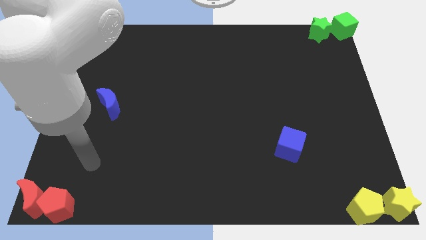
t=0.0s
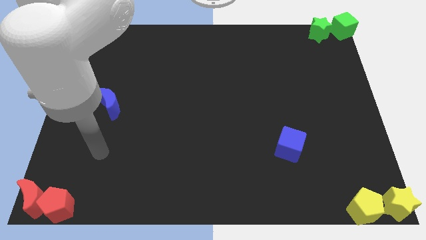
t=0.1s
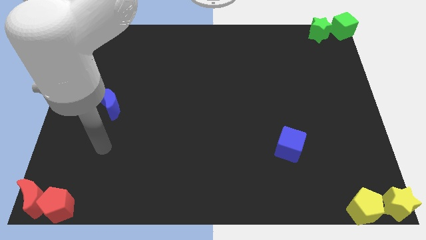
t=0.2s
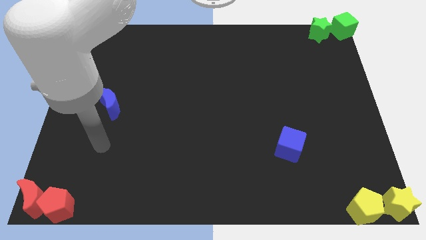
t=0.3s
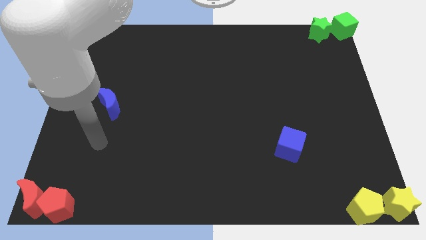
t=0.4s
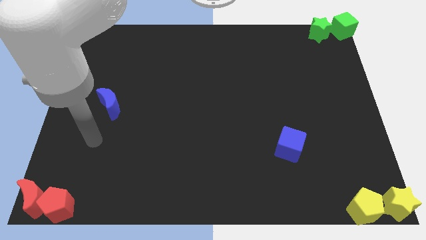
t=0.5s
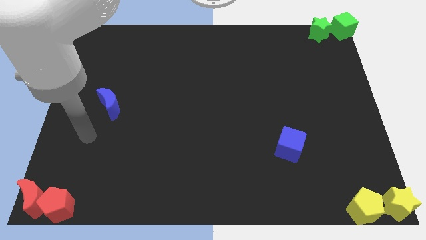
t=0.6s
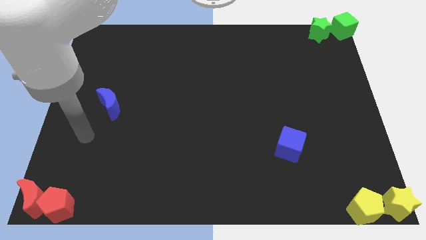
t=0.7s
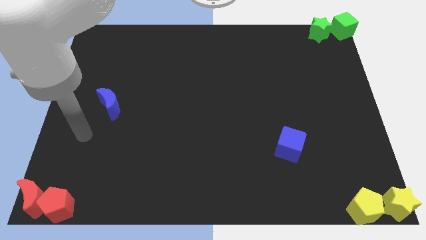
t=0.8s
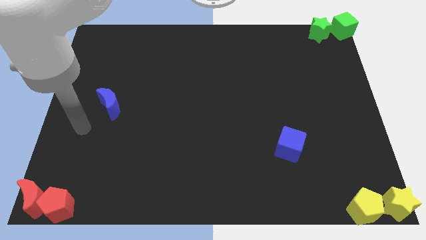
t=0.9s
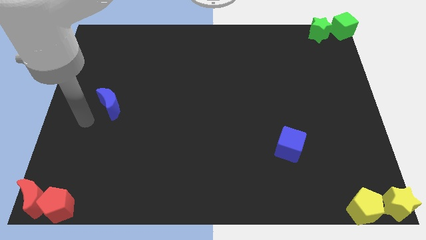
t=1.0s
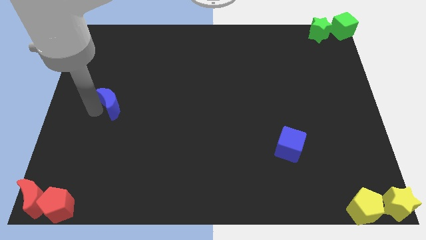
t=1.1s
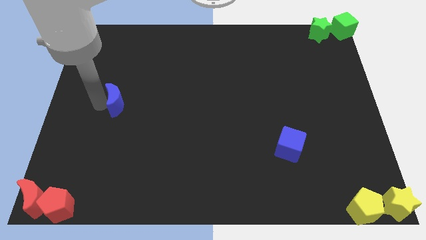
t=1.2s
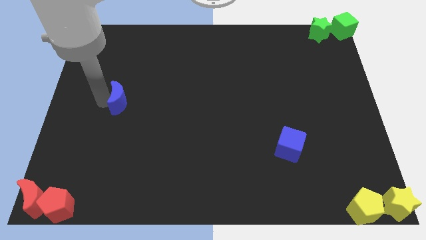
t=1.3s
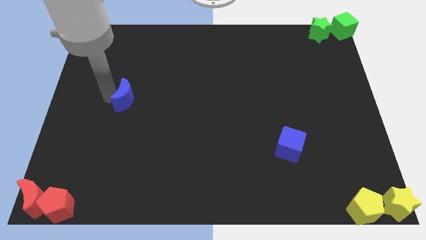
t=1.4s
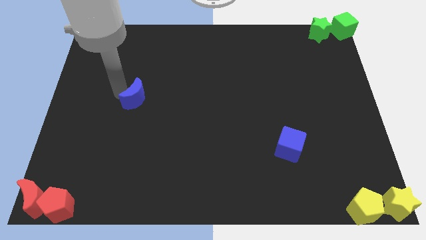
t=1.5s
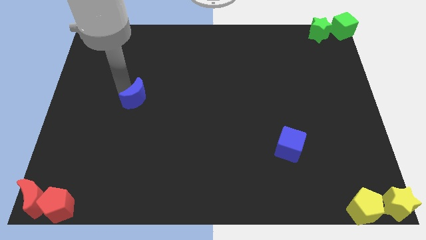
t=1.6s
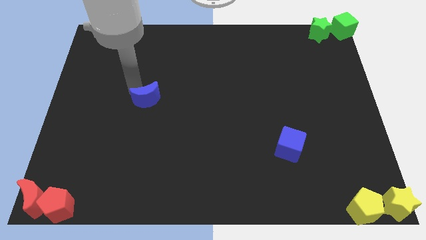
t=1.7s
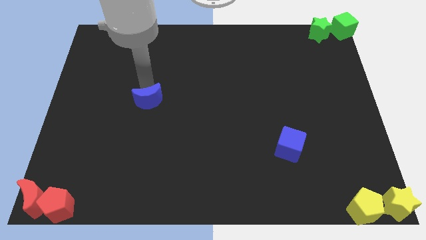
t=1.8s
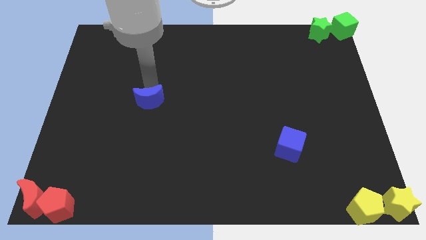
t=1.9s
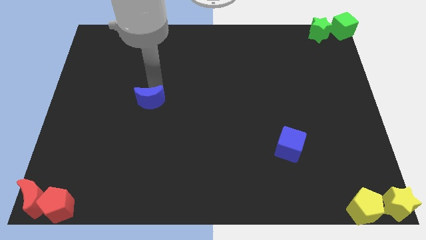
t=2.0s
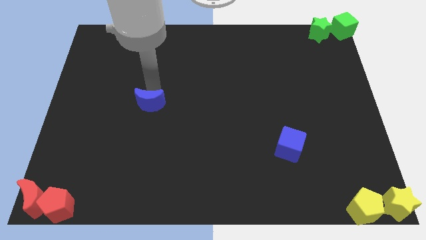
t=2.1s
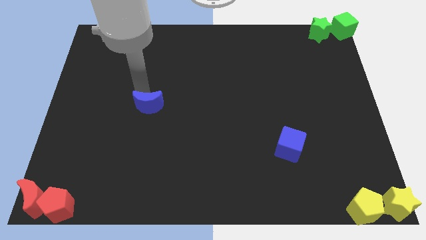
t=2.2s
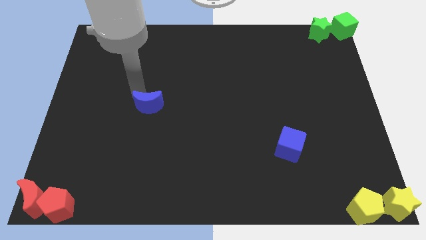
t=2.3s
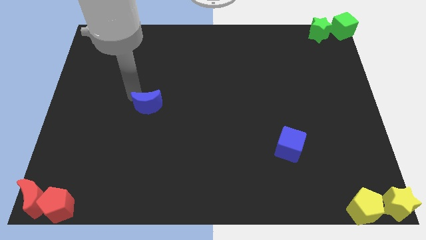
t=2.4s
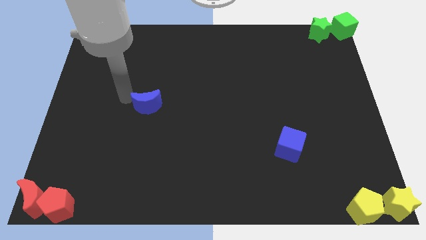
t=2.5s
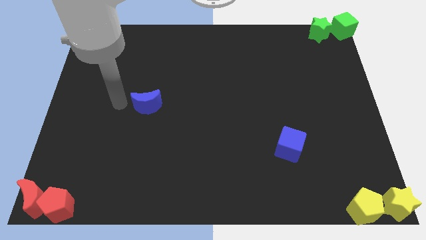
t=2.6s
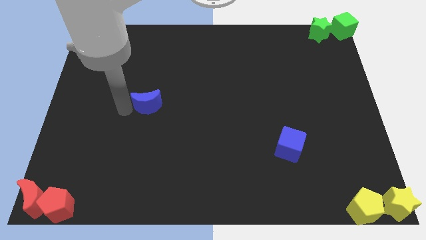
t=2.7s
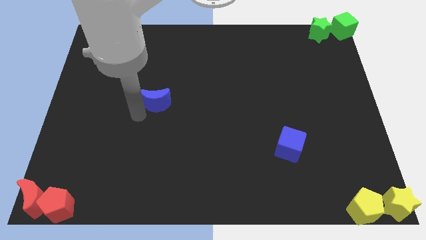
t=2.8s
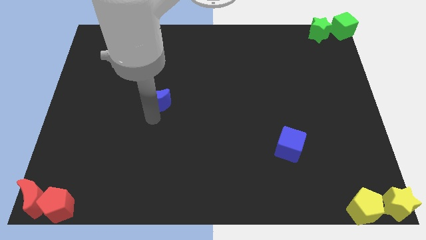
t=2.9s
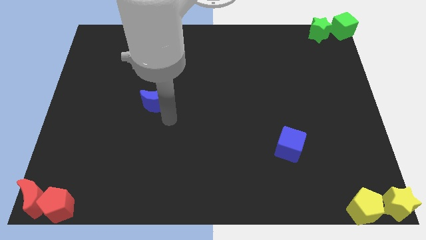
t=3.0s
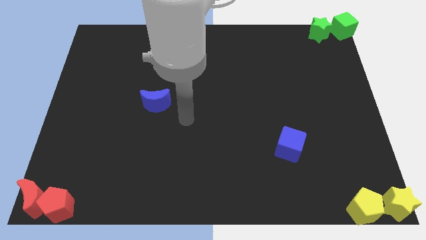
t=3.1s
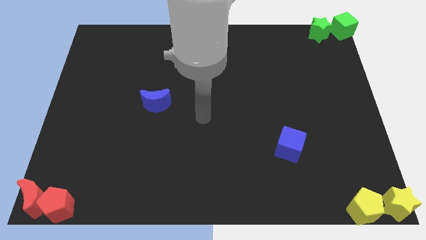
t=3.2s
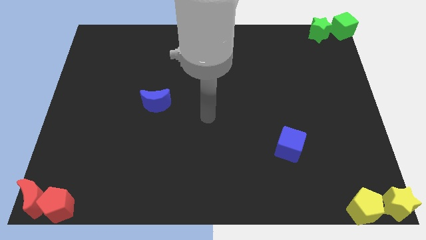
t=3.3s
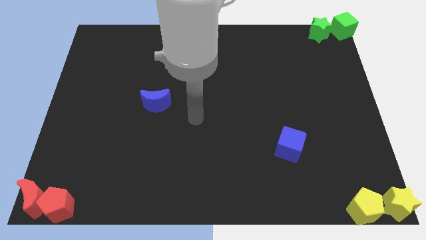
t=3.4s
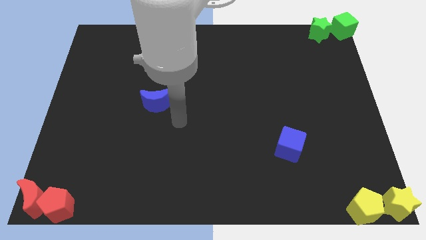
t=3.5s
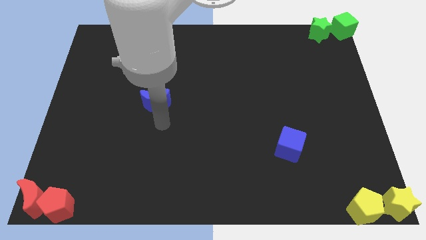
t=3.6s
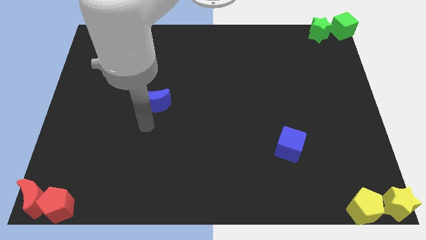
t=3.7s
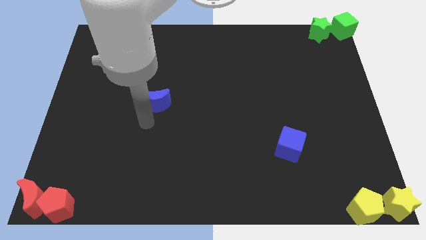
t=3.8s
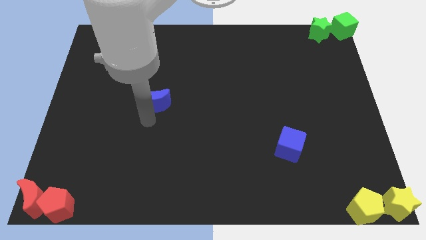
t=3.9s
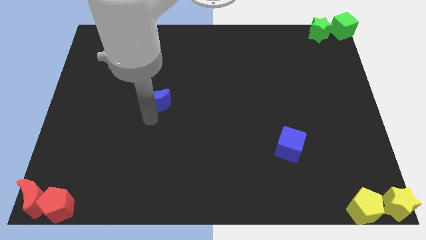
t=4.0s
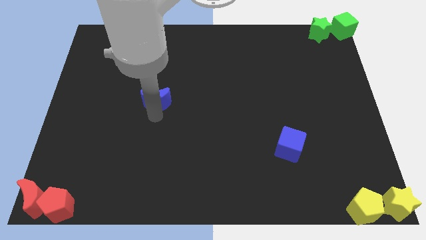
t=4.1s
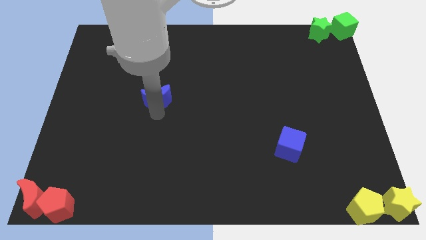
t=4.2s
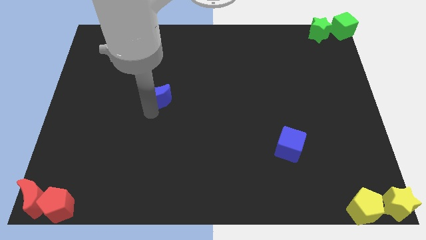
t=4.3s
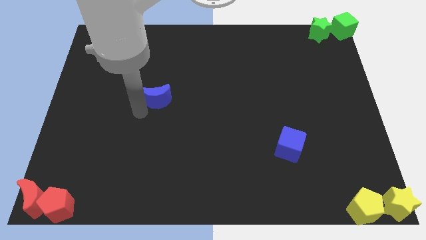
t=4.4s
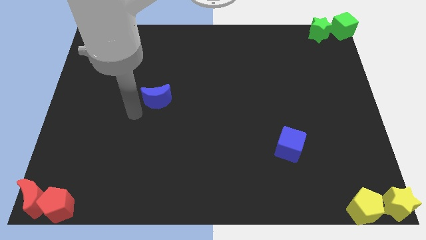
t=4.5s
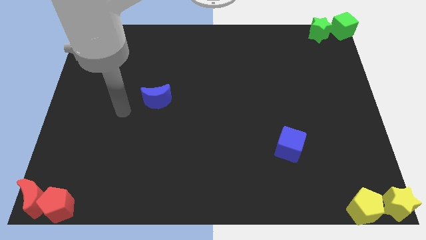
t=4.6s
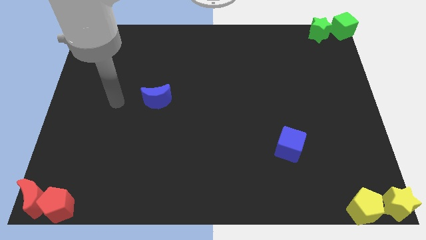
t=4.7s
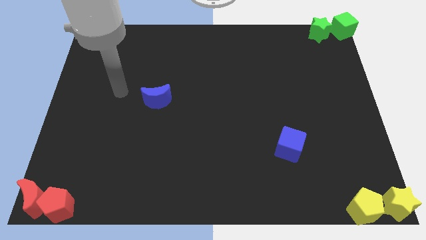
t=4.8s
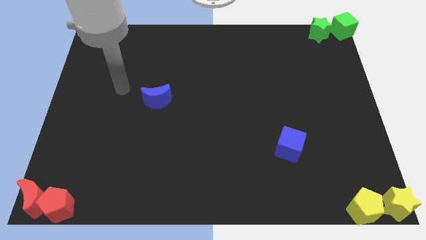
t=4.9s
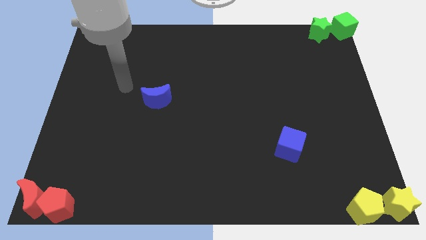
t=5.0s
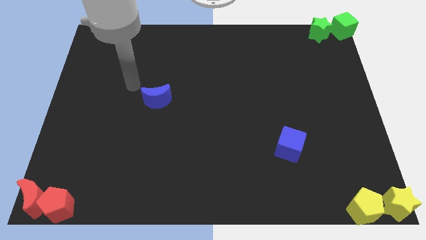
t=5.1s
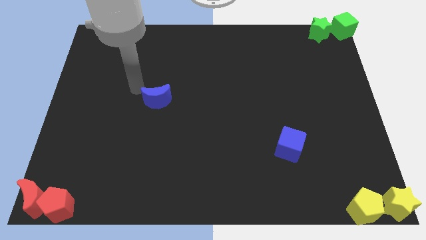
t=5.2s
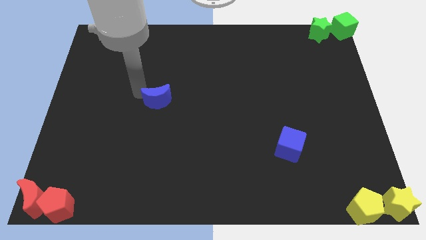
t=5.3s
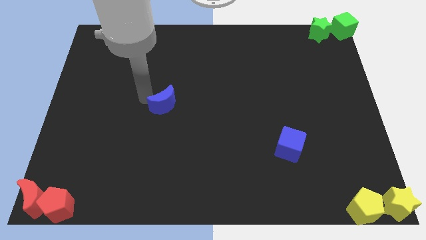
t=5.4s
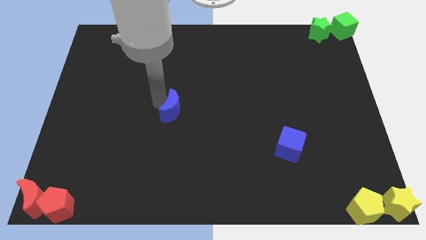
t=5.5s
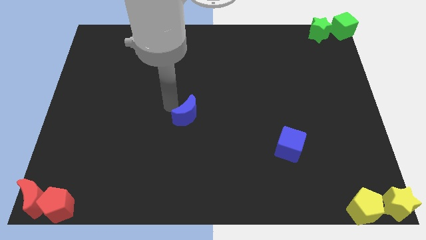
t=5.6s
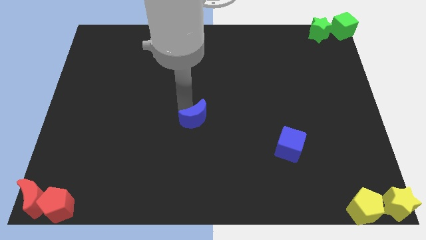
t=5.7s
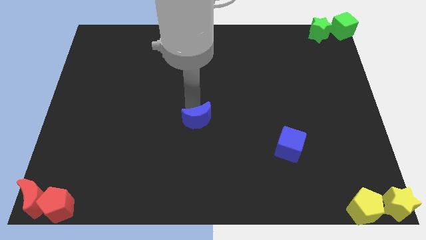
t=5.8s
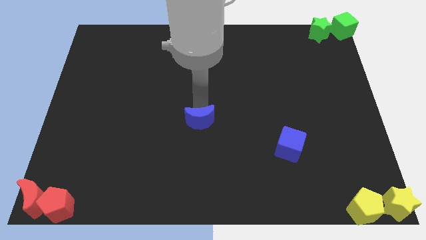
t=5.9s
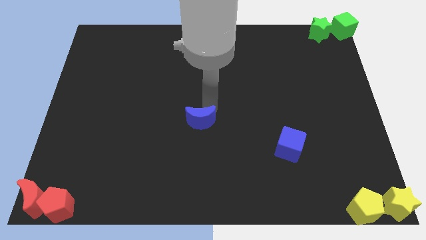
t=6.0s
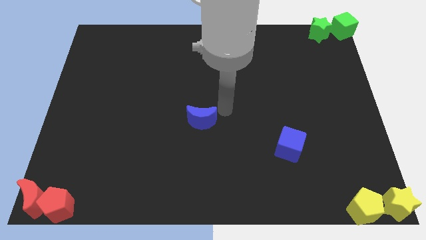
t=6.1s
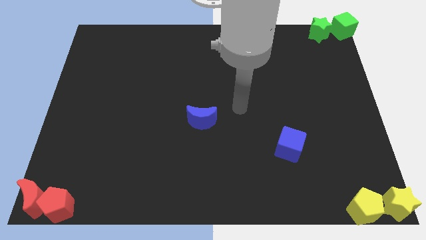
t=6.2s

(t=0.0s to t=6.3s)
move the blue crescent to the center of the board

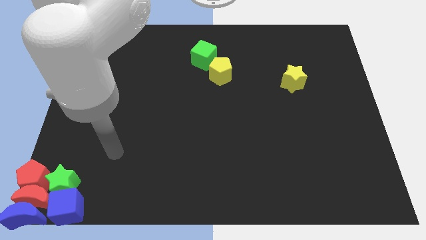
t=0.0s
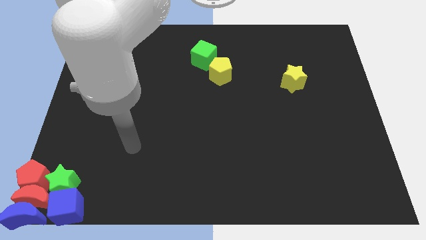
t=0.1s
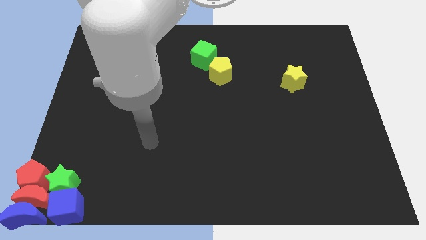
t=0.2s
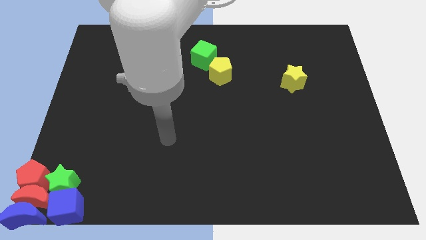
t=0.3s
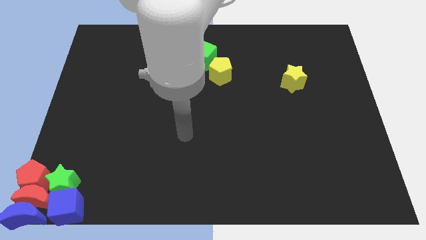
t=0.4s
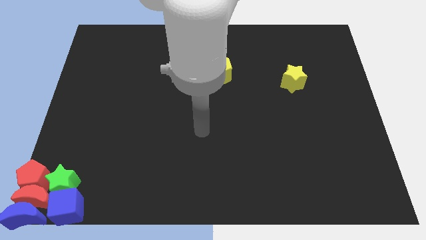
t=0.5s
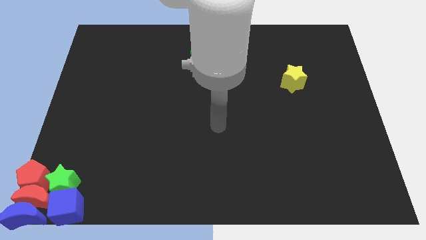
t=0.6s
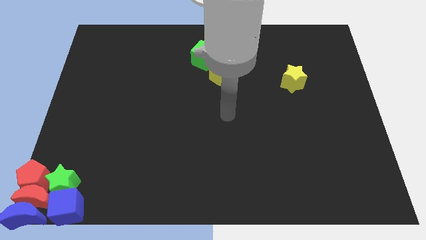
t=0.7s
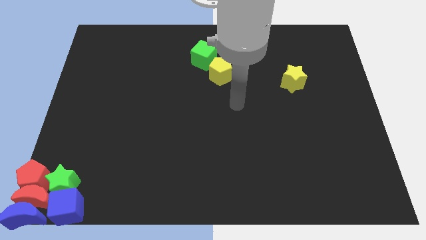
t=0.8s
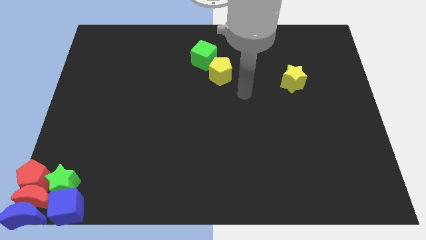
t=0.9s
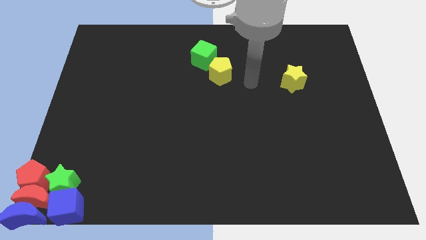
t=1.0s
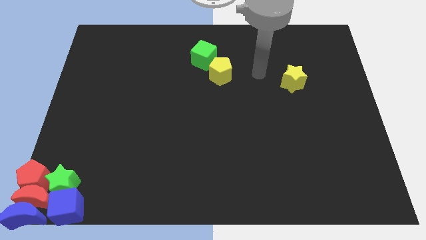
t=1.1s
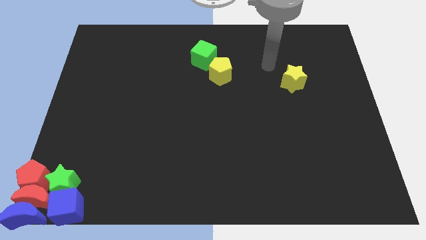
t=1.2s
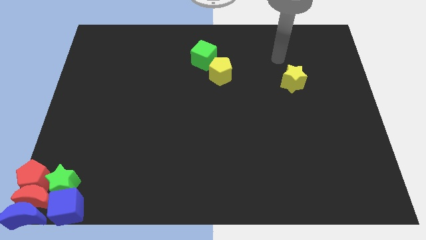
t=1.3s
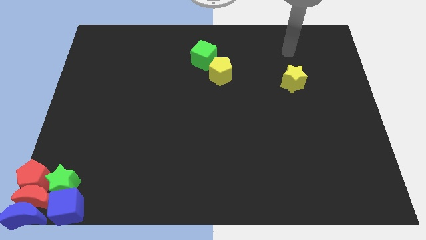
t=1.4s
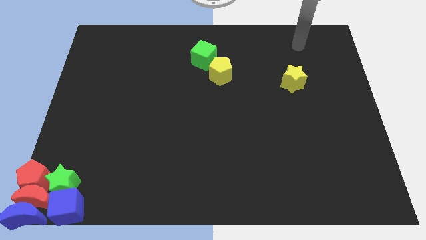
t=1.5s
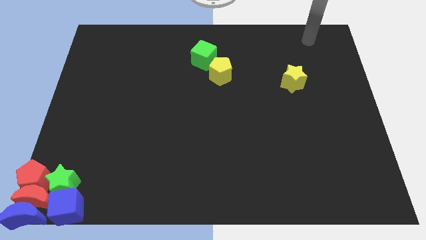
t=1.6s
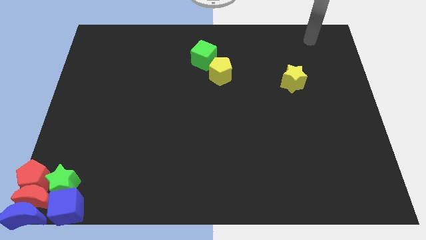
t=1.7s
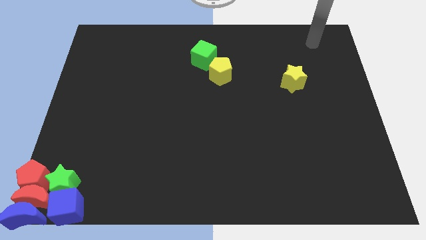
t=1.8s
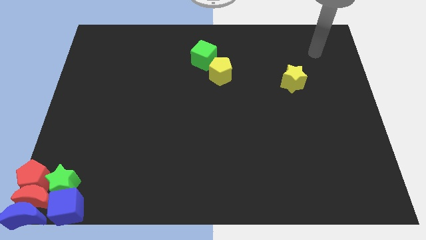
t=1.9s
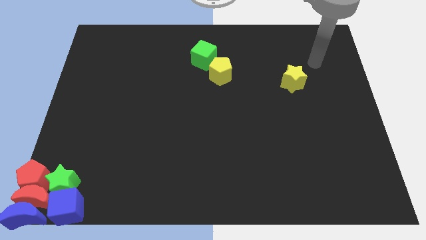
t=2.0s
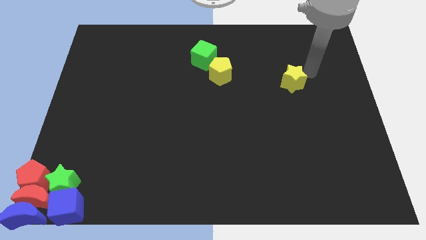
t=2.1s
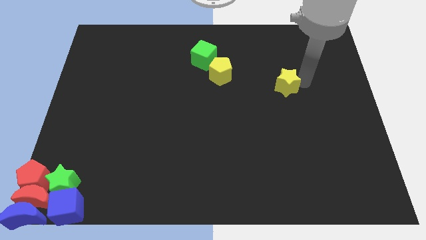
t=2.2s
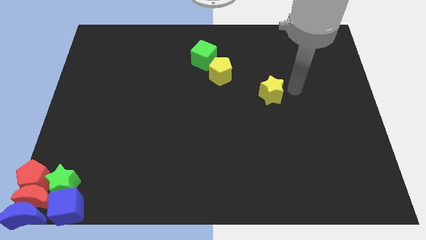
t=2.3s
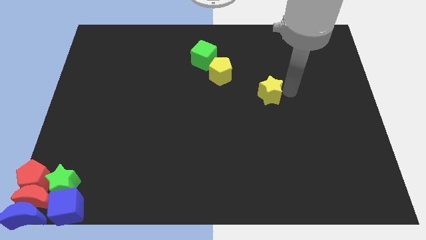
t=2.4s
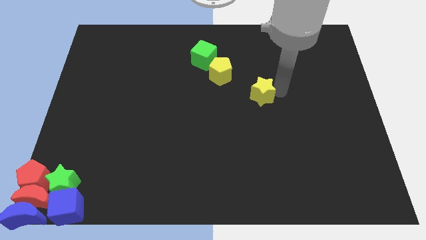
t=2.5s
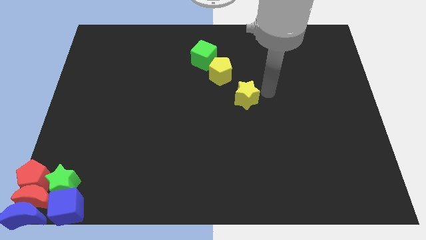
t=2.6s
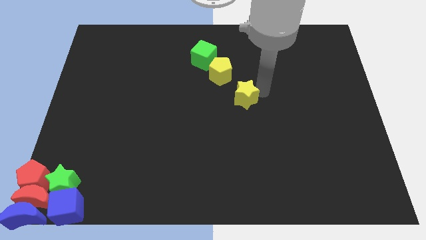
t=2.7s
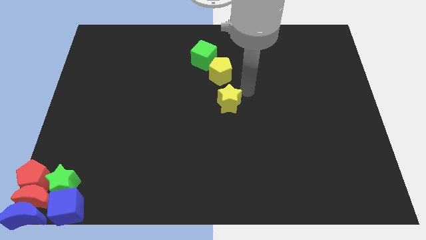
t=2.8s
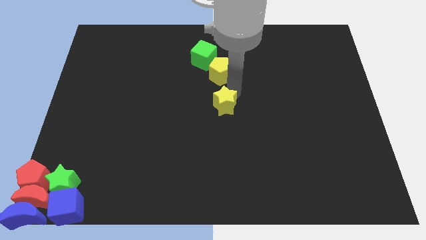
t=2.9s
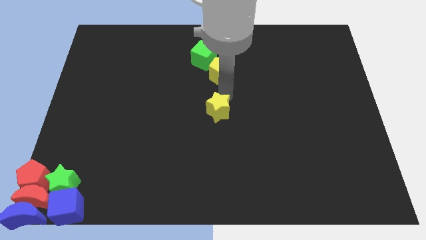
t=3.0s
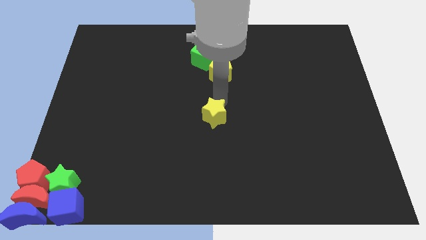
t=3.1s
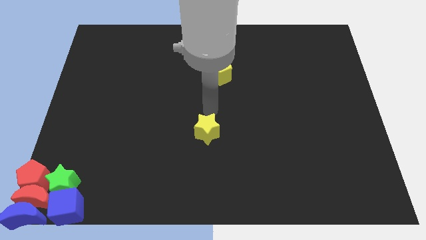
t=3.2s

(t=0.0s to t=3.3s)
move the yellow star to the middle of the board
